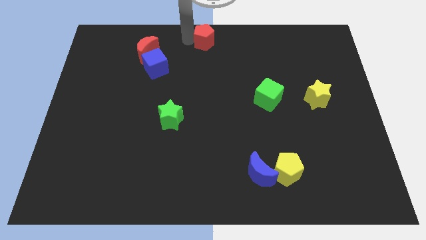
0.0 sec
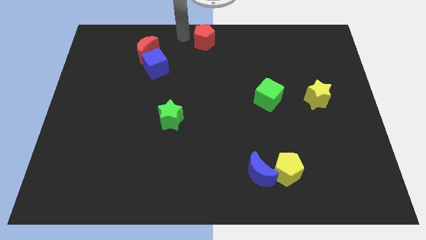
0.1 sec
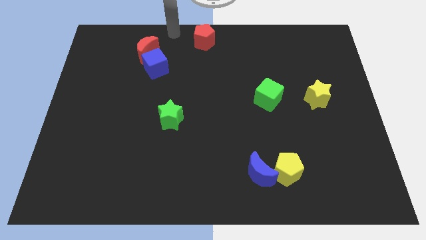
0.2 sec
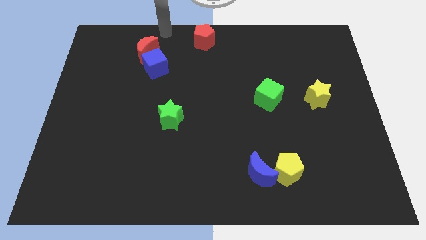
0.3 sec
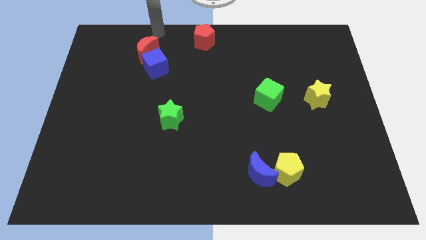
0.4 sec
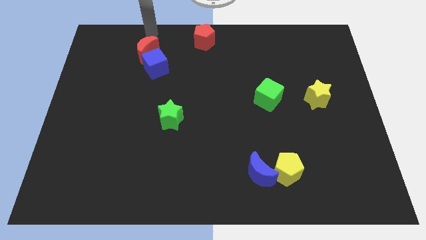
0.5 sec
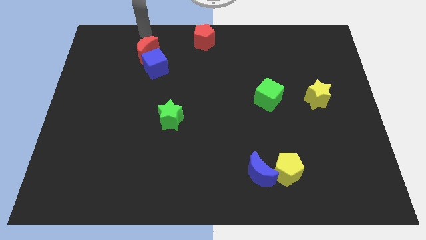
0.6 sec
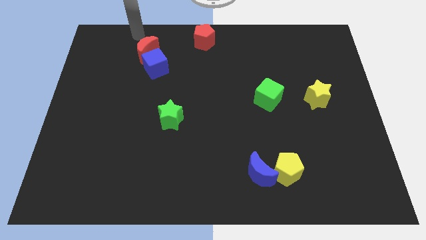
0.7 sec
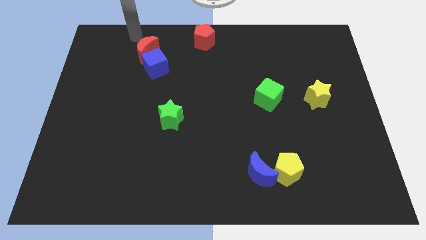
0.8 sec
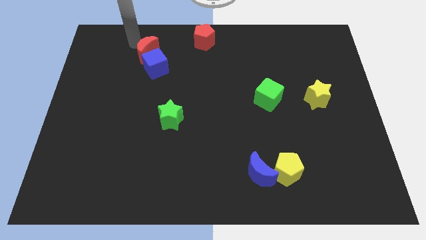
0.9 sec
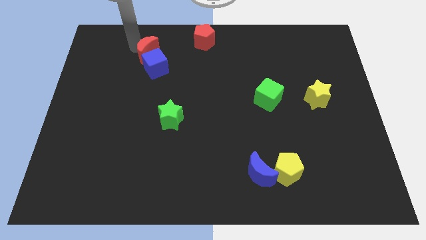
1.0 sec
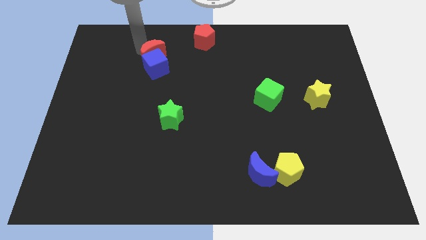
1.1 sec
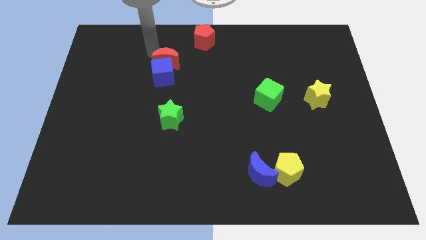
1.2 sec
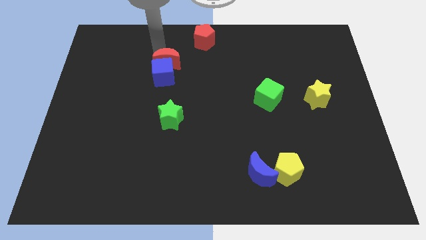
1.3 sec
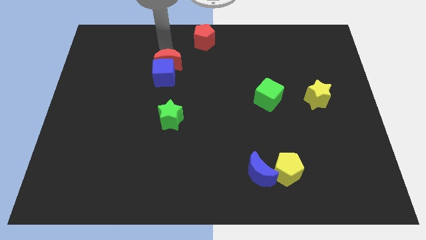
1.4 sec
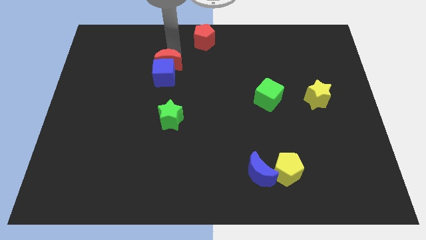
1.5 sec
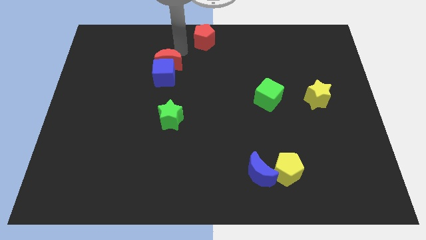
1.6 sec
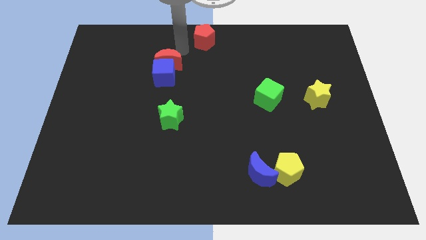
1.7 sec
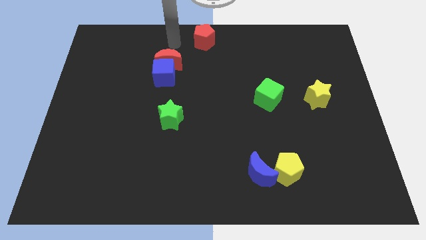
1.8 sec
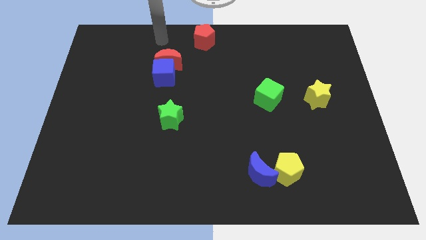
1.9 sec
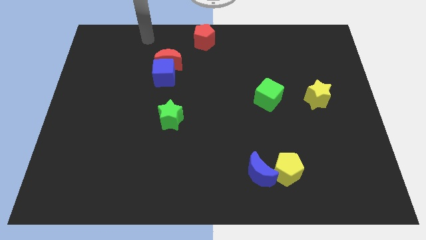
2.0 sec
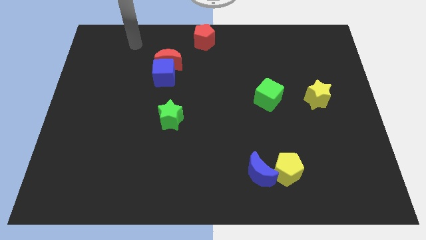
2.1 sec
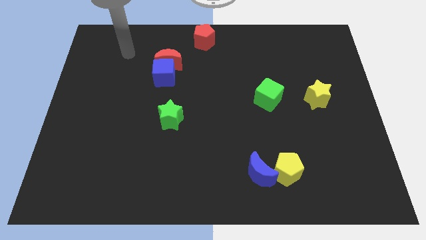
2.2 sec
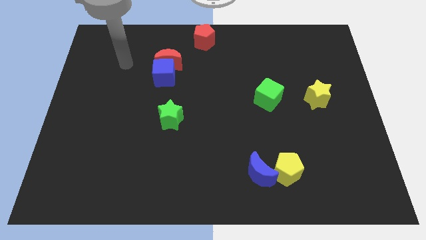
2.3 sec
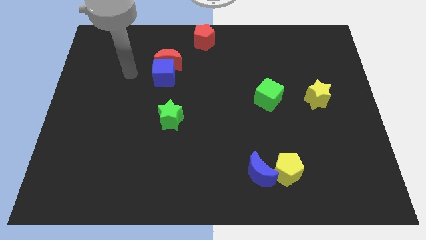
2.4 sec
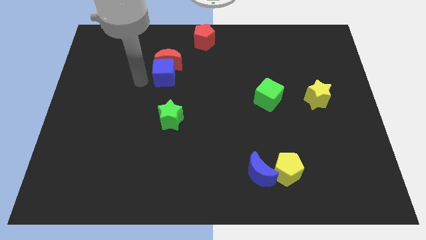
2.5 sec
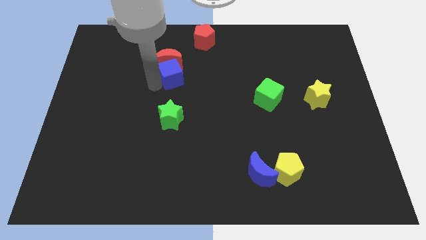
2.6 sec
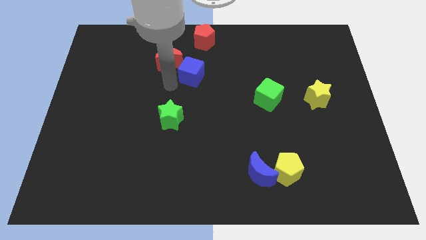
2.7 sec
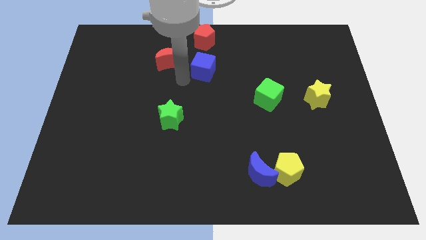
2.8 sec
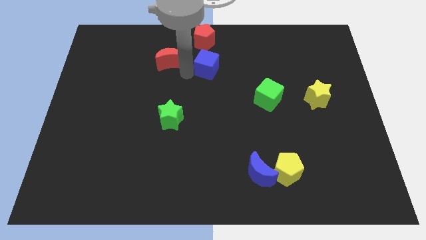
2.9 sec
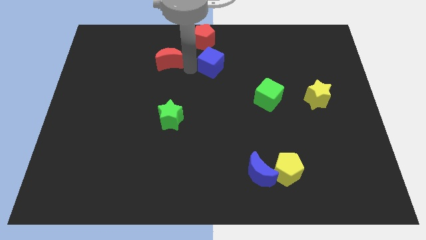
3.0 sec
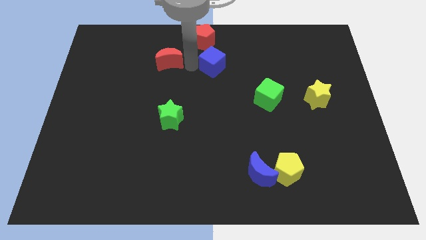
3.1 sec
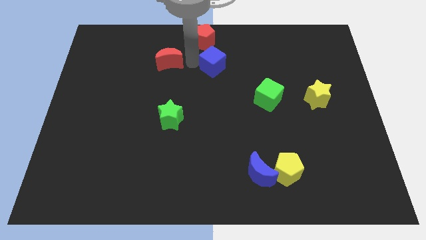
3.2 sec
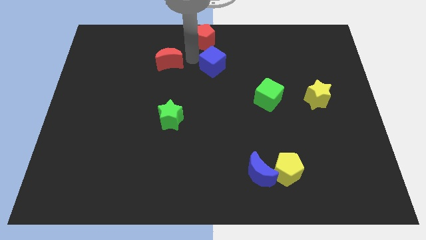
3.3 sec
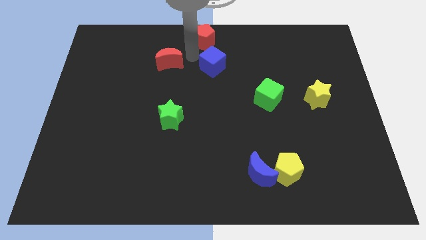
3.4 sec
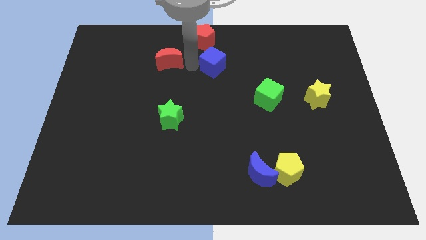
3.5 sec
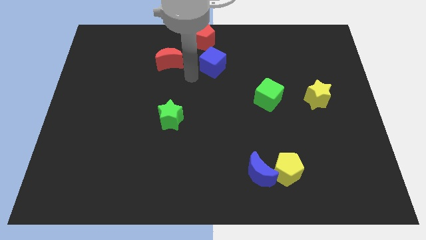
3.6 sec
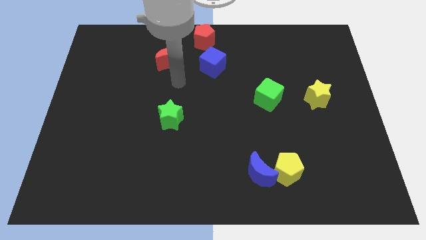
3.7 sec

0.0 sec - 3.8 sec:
move the blue cube away from the red crescent

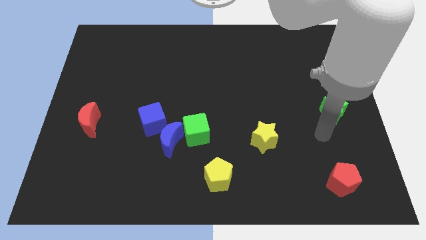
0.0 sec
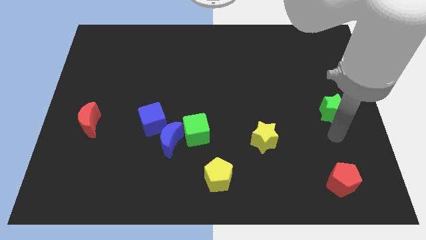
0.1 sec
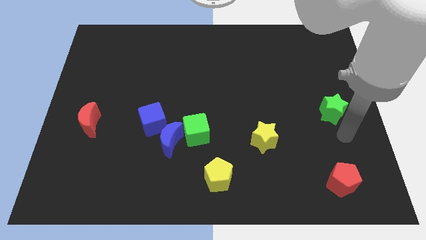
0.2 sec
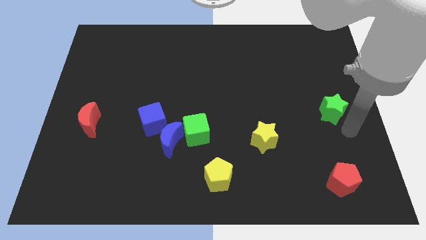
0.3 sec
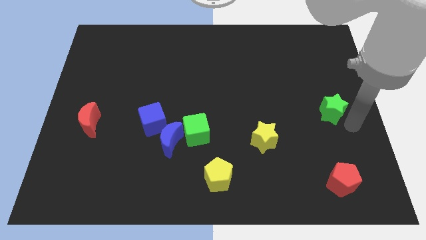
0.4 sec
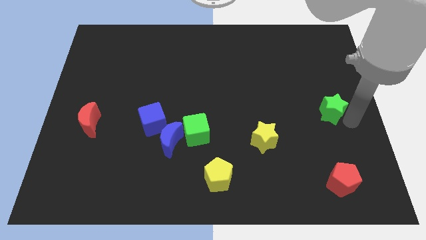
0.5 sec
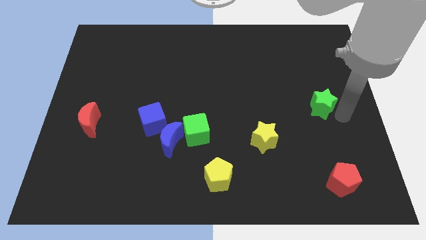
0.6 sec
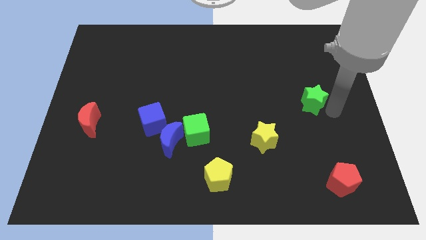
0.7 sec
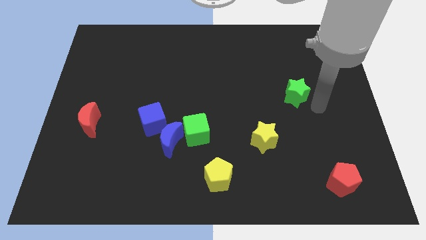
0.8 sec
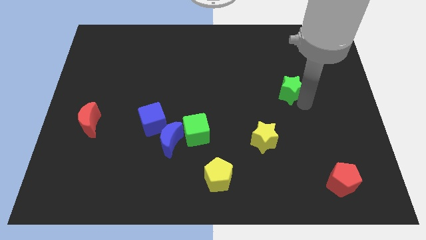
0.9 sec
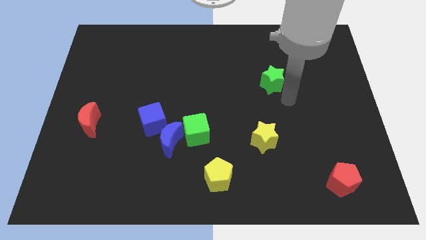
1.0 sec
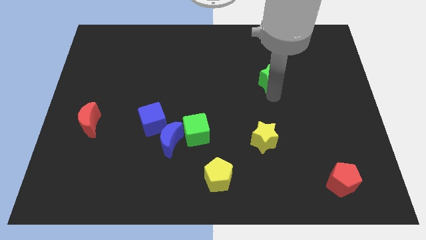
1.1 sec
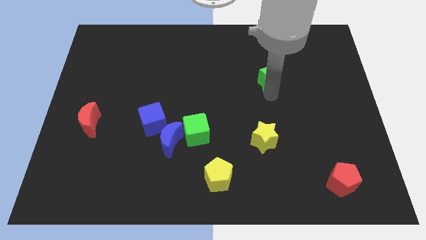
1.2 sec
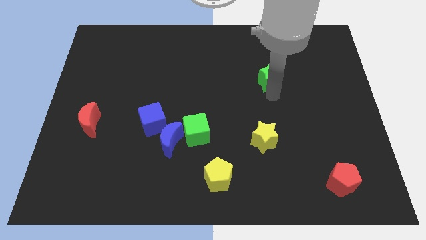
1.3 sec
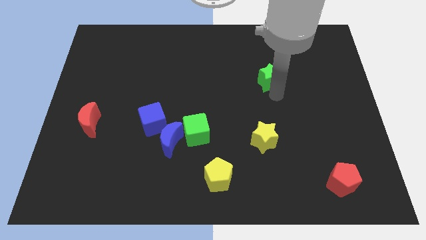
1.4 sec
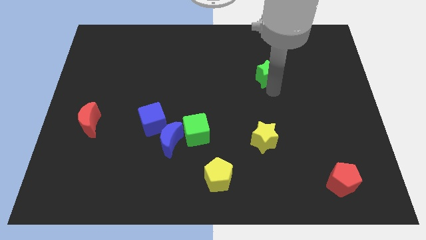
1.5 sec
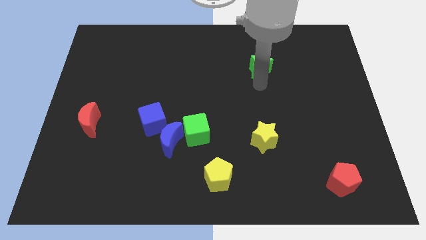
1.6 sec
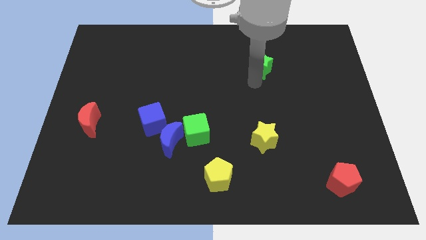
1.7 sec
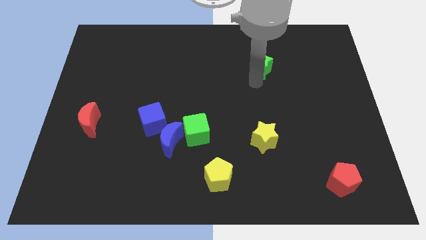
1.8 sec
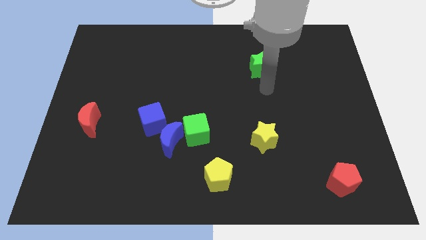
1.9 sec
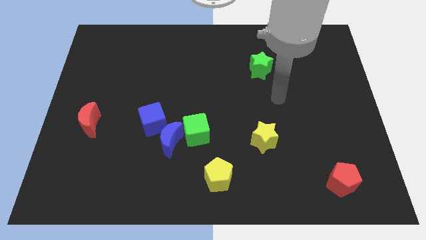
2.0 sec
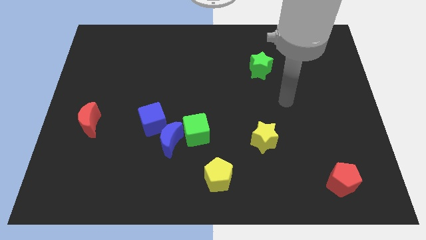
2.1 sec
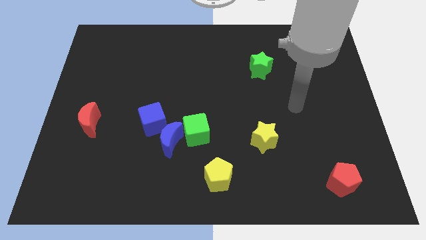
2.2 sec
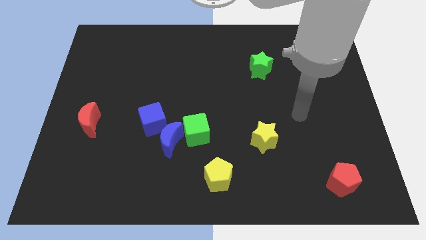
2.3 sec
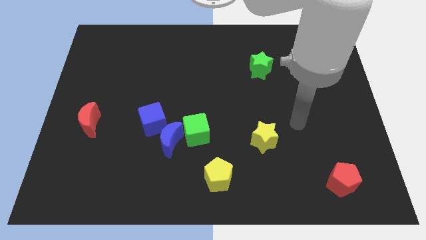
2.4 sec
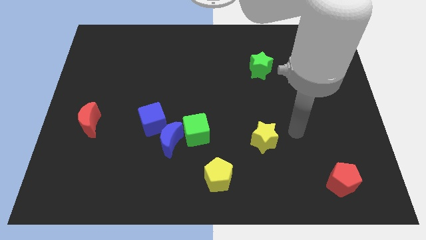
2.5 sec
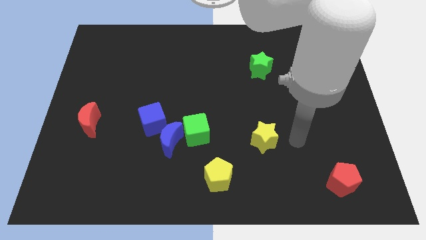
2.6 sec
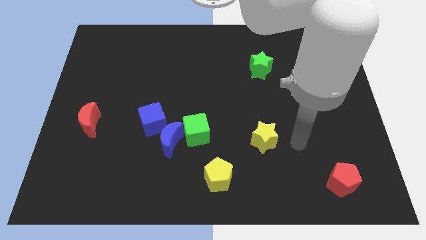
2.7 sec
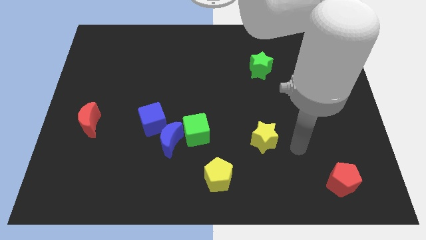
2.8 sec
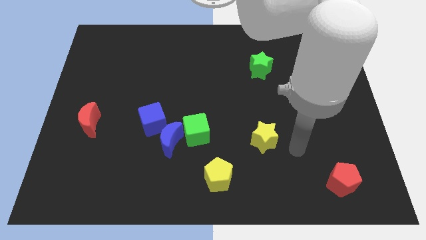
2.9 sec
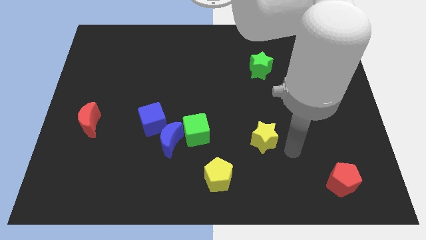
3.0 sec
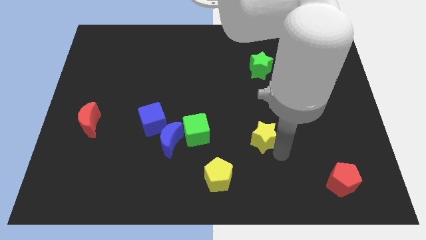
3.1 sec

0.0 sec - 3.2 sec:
push the green star towards the top side of the board

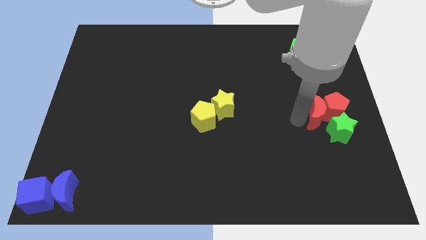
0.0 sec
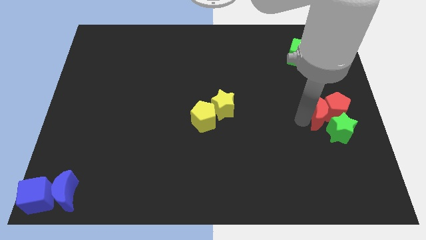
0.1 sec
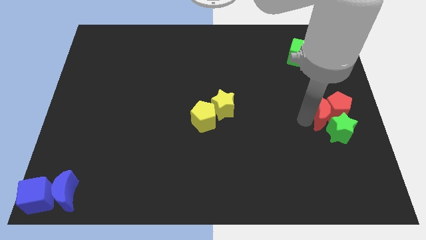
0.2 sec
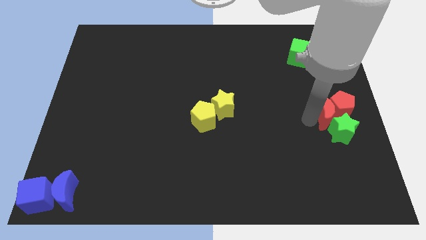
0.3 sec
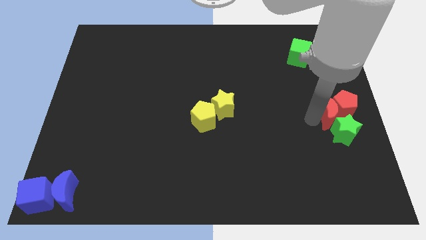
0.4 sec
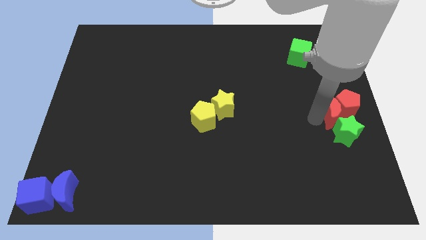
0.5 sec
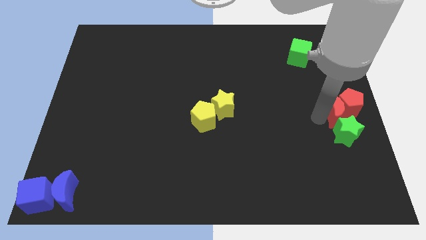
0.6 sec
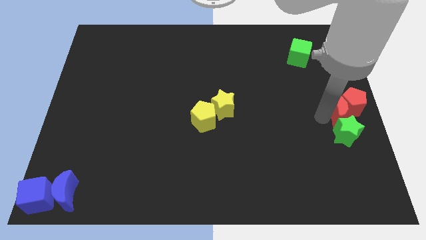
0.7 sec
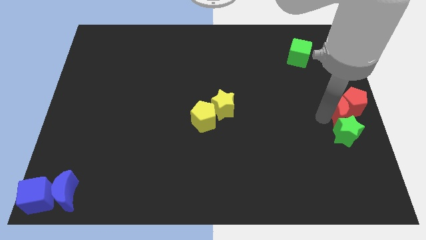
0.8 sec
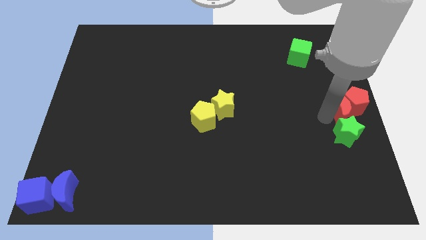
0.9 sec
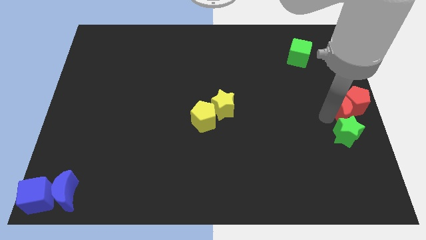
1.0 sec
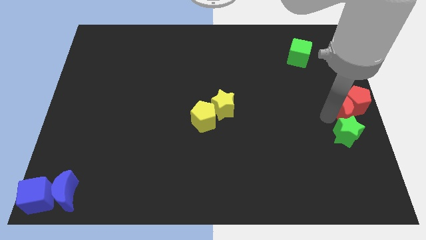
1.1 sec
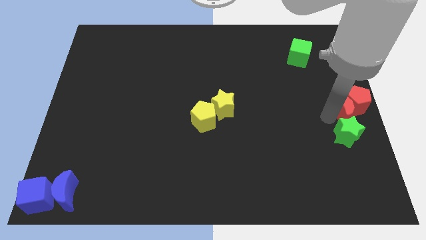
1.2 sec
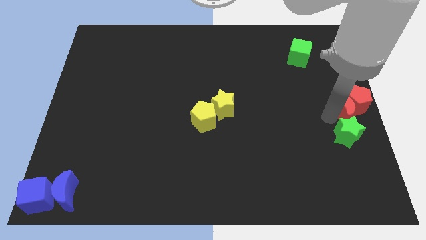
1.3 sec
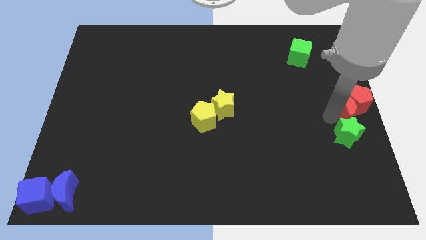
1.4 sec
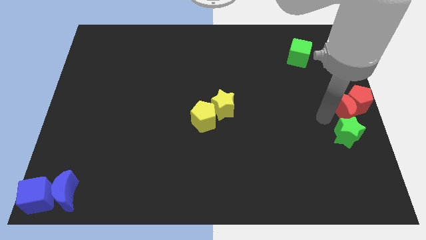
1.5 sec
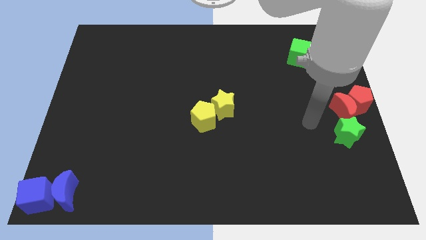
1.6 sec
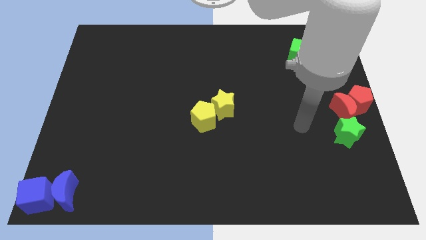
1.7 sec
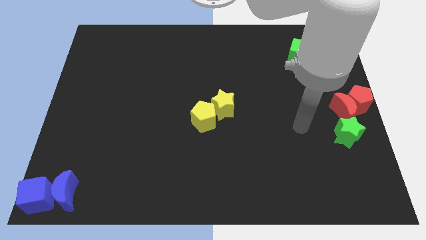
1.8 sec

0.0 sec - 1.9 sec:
push the red moon along with the red pentagon to the right centre of the board
